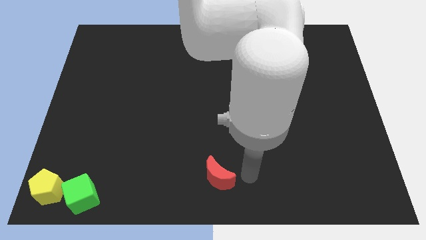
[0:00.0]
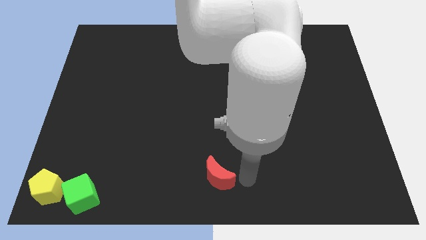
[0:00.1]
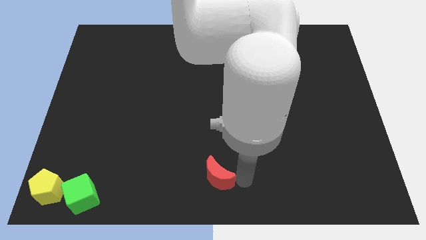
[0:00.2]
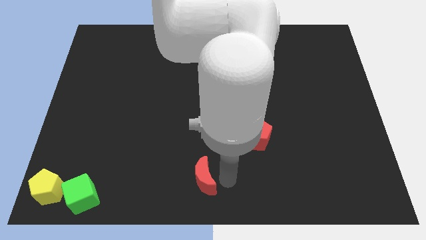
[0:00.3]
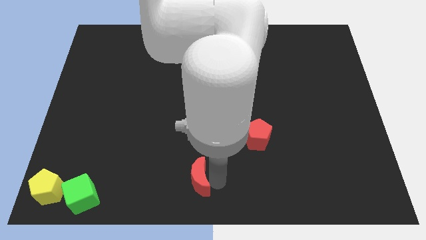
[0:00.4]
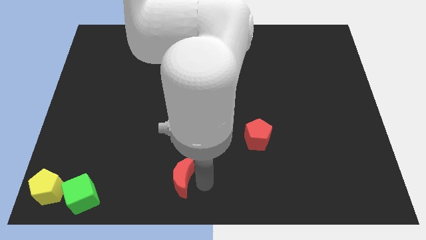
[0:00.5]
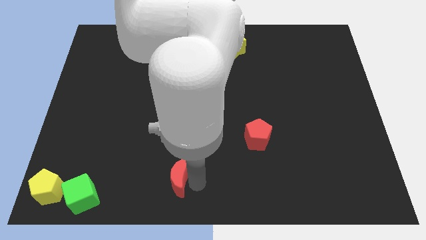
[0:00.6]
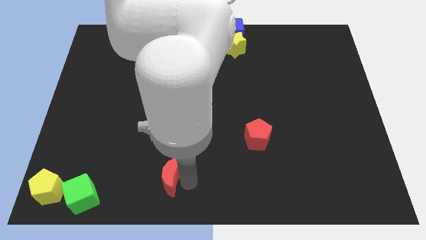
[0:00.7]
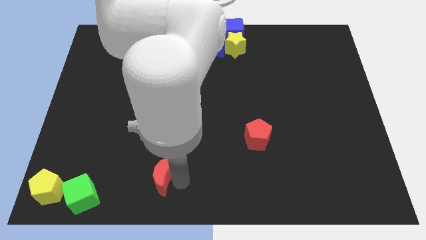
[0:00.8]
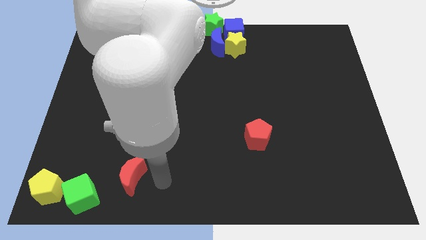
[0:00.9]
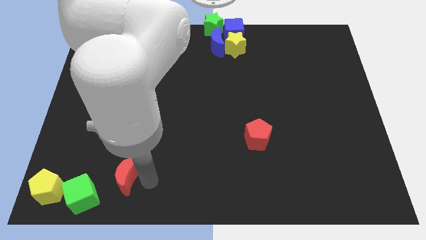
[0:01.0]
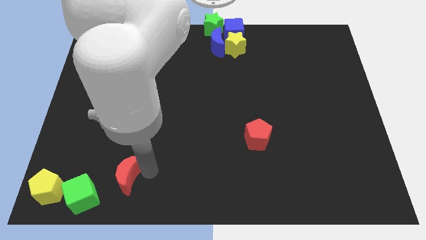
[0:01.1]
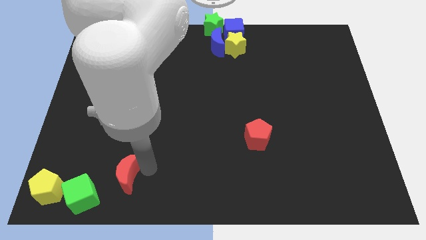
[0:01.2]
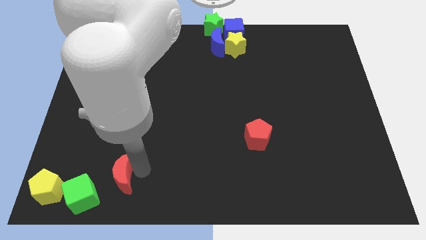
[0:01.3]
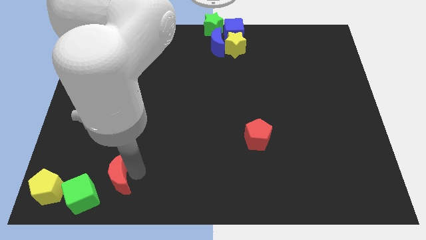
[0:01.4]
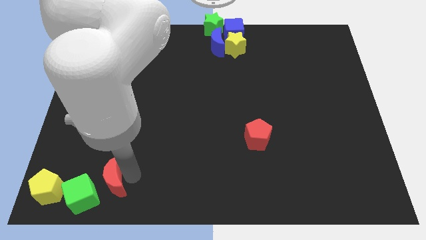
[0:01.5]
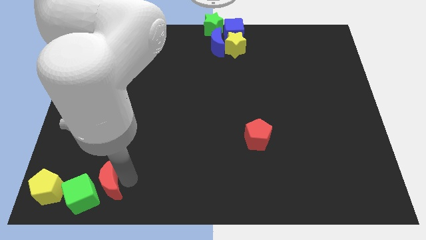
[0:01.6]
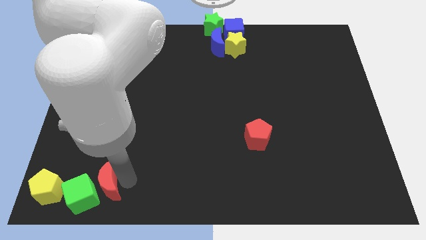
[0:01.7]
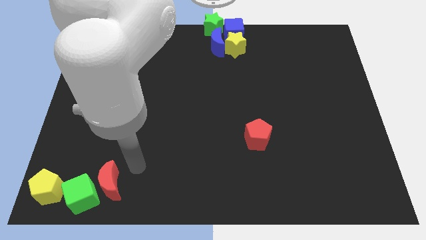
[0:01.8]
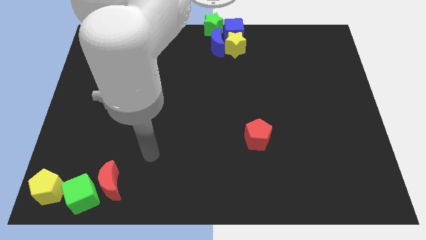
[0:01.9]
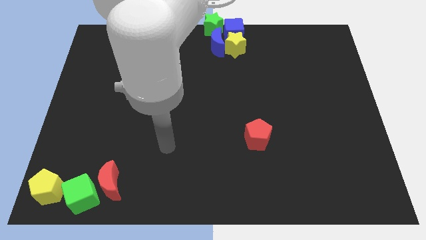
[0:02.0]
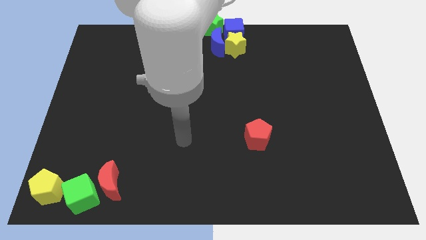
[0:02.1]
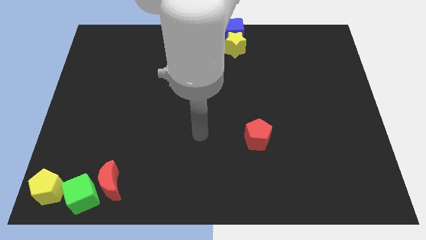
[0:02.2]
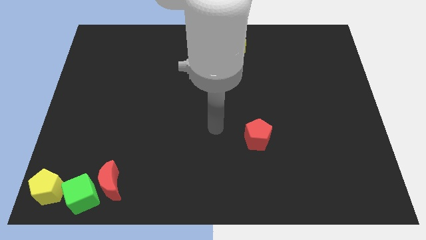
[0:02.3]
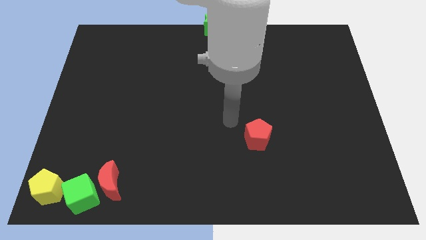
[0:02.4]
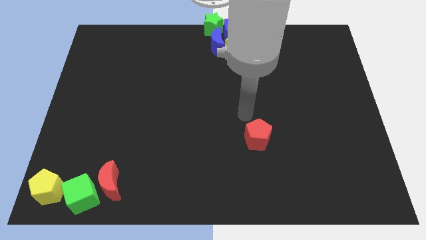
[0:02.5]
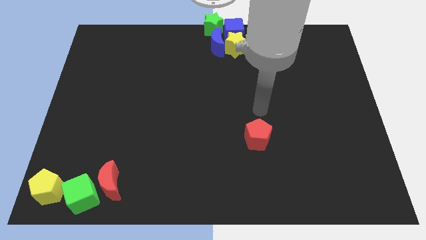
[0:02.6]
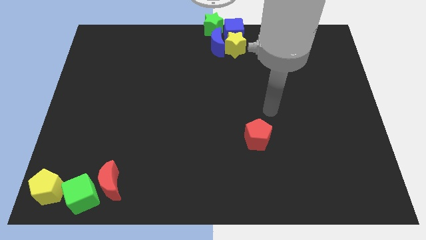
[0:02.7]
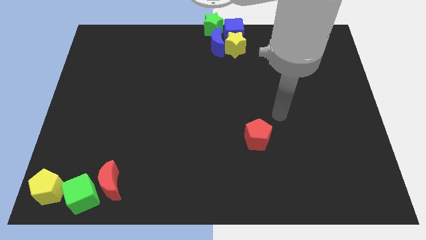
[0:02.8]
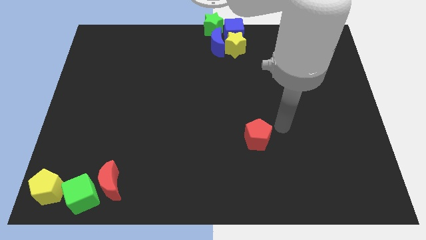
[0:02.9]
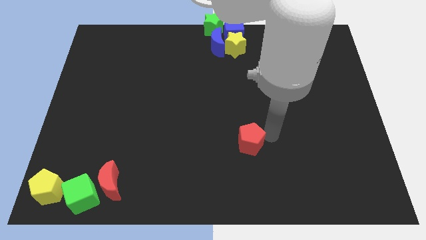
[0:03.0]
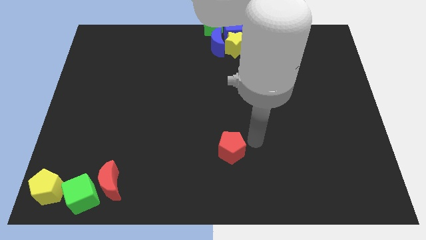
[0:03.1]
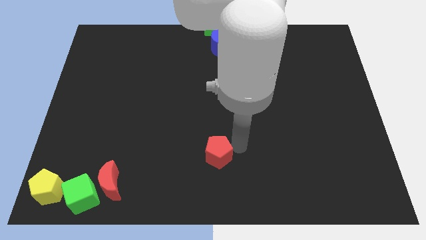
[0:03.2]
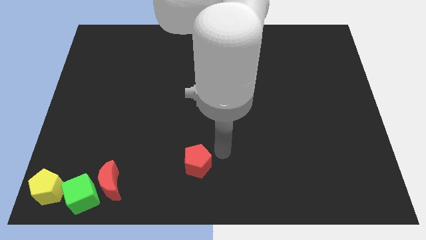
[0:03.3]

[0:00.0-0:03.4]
push the red crescent towards the right of green cube

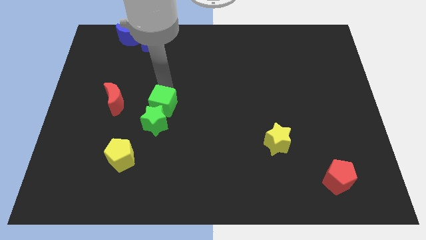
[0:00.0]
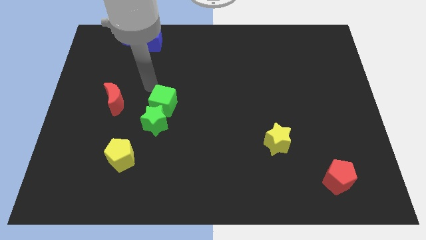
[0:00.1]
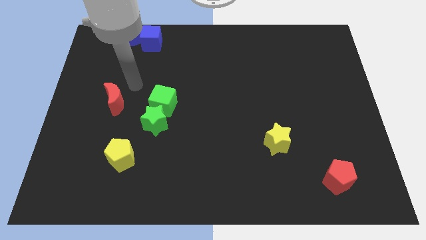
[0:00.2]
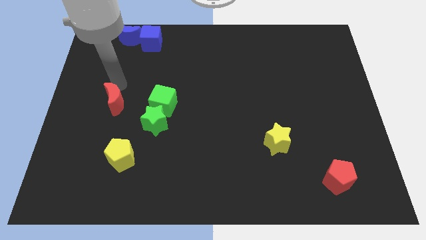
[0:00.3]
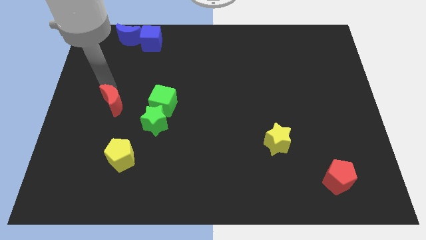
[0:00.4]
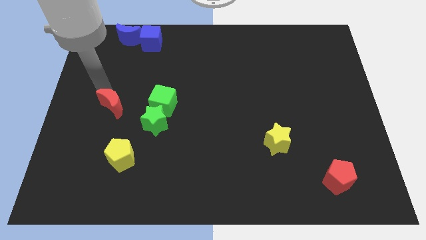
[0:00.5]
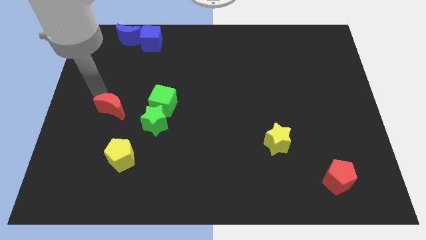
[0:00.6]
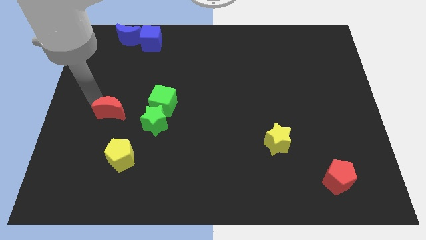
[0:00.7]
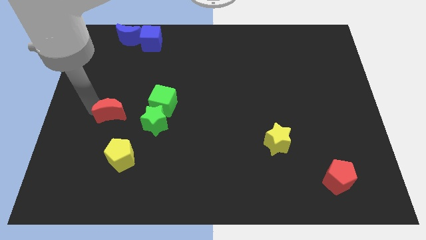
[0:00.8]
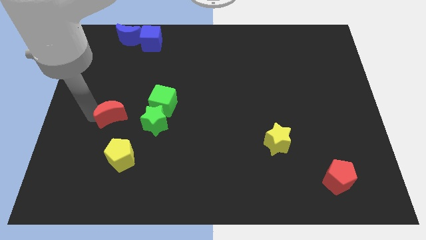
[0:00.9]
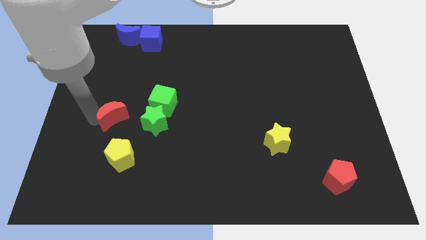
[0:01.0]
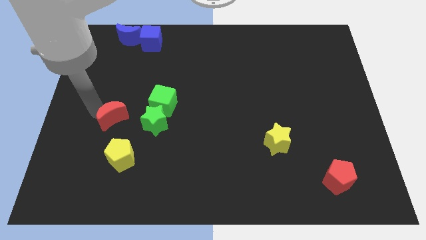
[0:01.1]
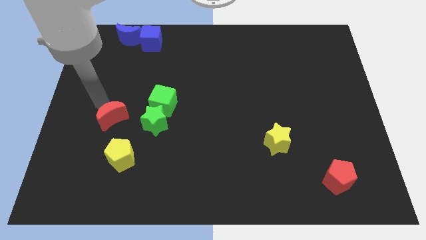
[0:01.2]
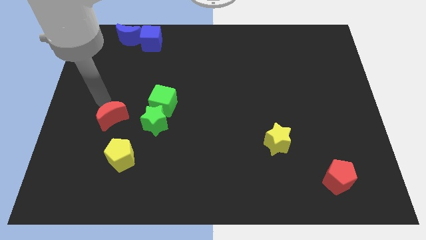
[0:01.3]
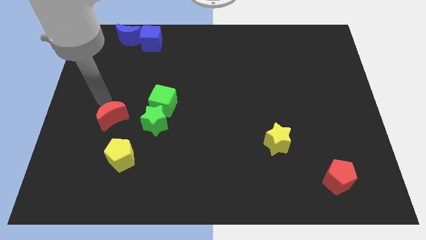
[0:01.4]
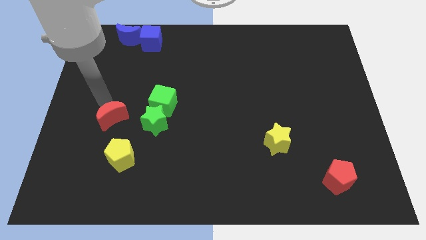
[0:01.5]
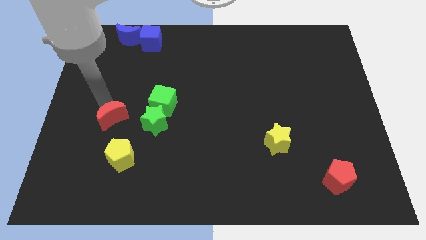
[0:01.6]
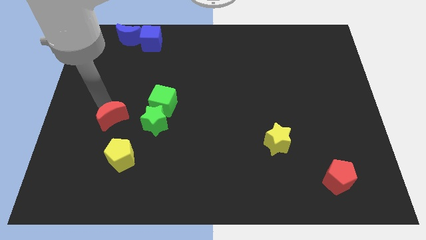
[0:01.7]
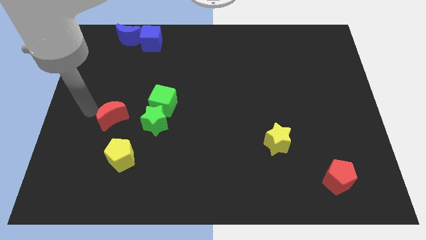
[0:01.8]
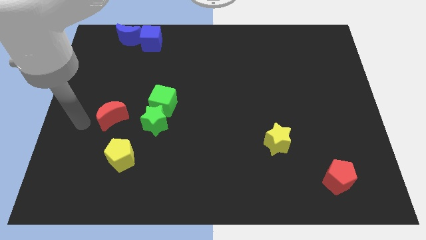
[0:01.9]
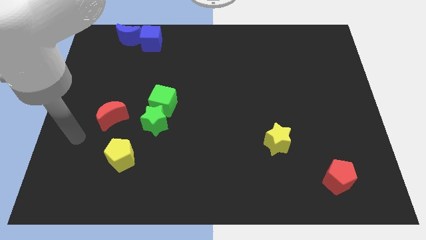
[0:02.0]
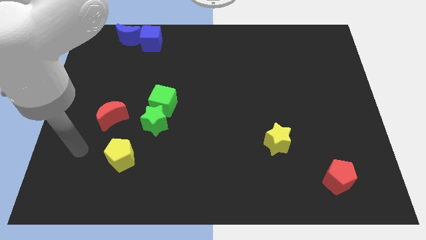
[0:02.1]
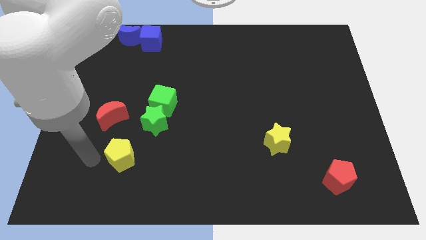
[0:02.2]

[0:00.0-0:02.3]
move the red moon slightly to the bottom of the board

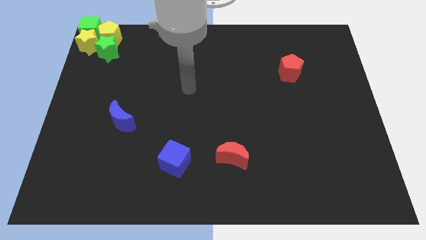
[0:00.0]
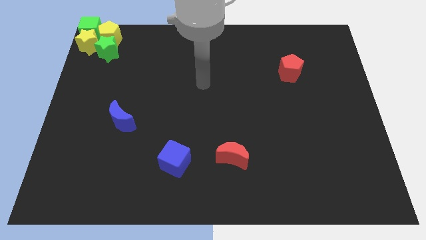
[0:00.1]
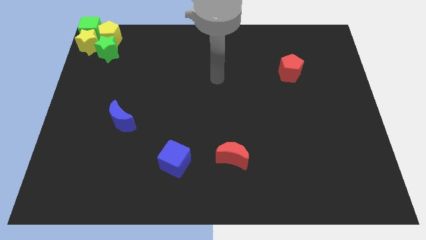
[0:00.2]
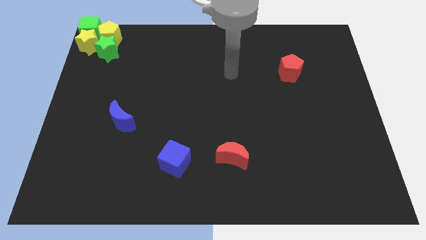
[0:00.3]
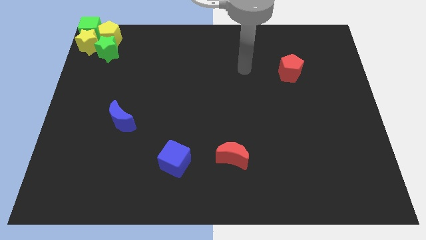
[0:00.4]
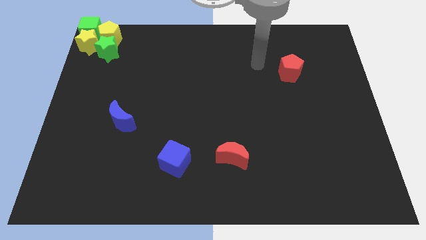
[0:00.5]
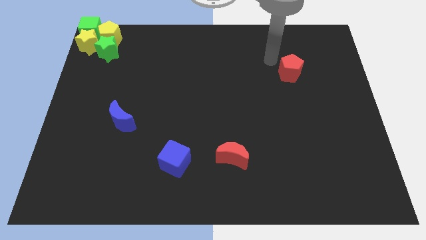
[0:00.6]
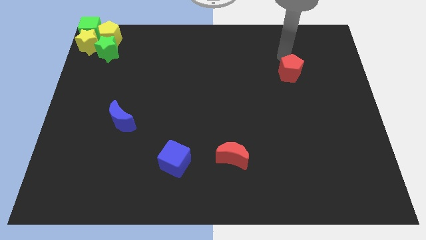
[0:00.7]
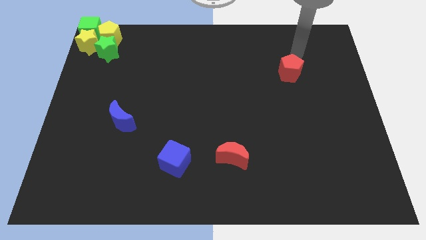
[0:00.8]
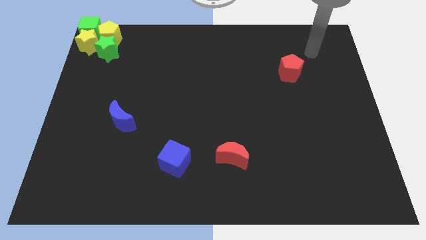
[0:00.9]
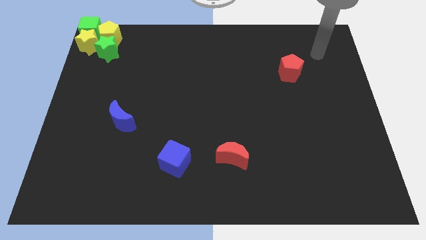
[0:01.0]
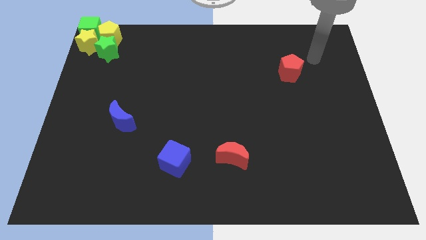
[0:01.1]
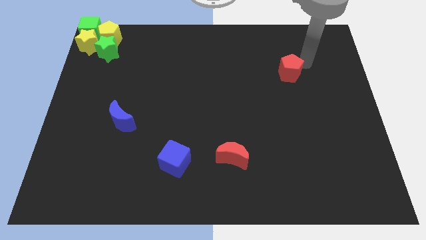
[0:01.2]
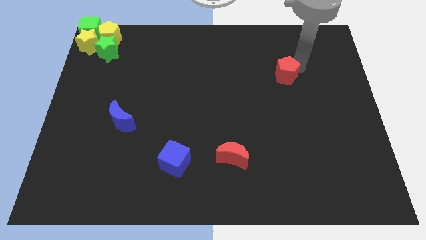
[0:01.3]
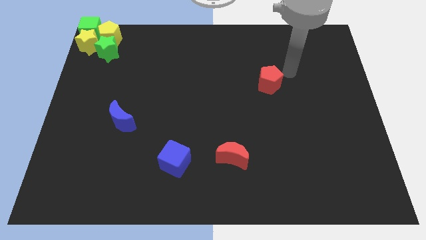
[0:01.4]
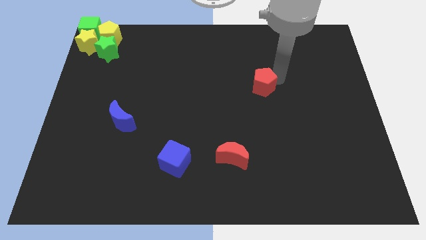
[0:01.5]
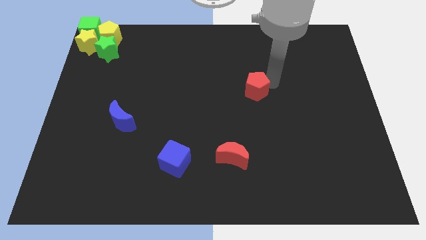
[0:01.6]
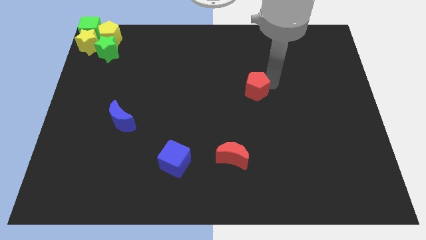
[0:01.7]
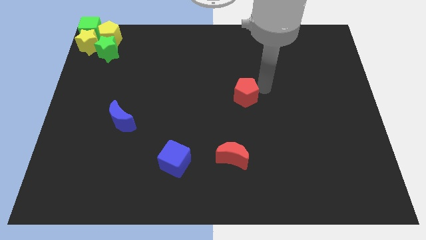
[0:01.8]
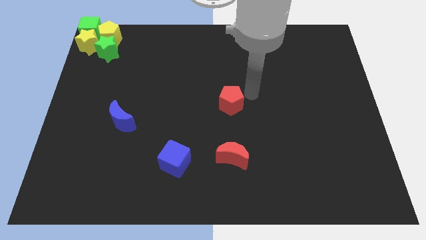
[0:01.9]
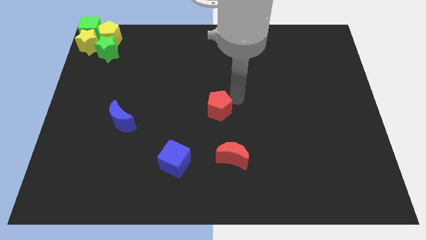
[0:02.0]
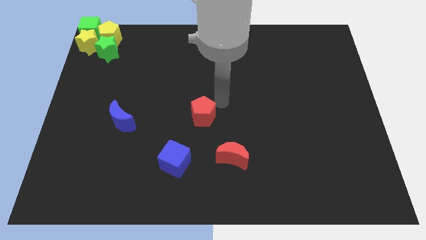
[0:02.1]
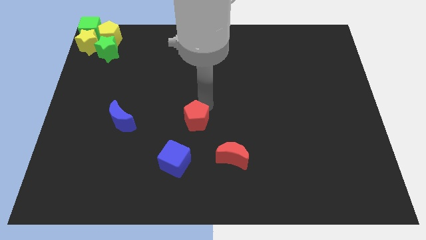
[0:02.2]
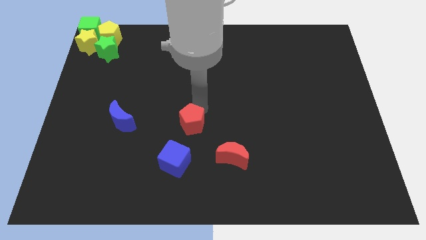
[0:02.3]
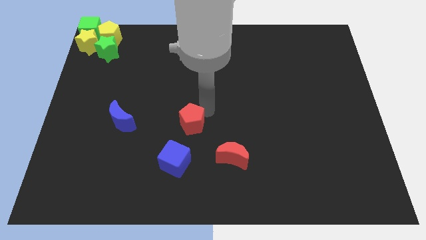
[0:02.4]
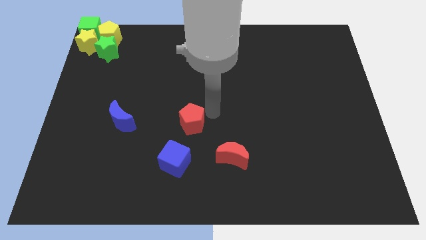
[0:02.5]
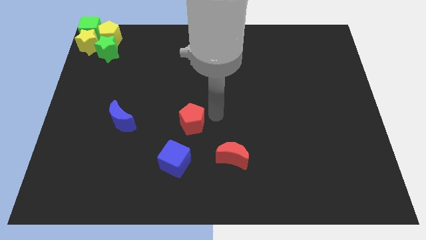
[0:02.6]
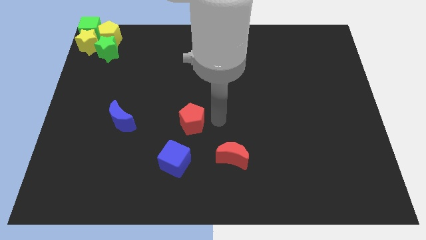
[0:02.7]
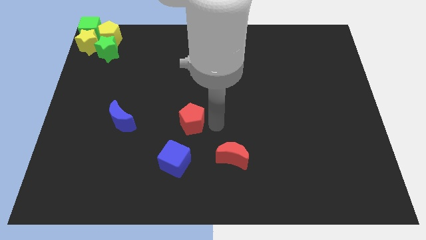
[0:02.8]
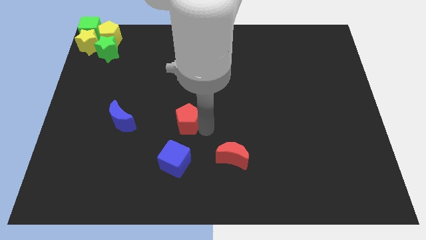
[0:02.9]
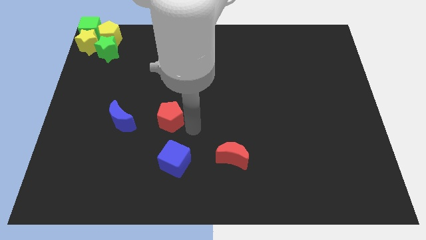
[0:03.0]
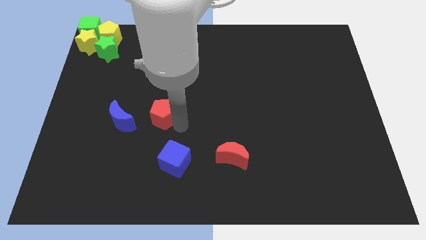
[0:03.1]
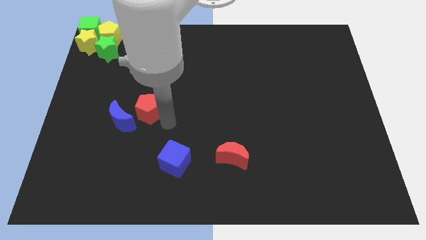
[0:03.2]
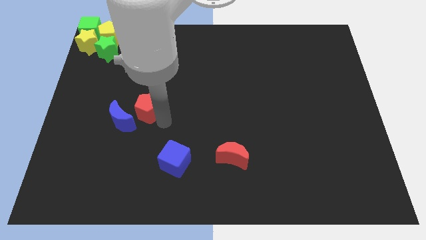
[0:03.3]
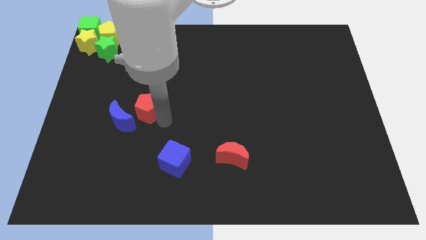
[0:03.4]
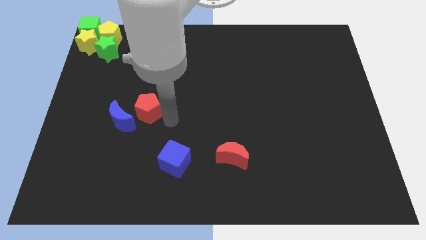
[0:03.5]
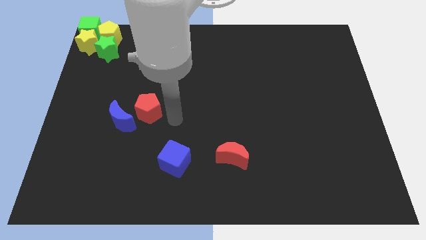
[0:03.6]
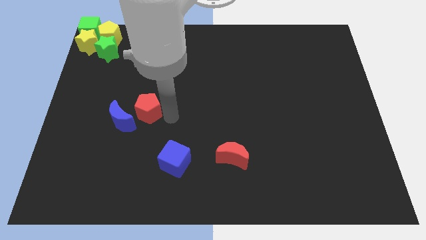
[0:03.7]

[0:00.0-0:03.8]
move the red pentagon diagonally top left to the blue cube
